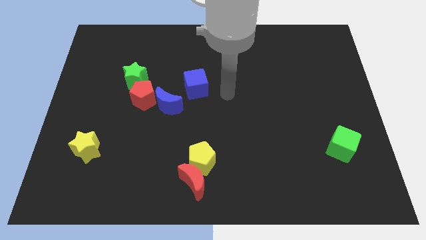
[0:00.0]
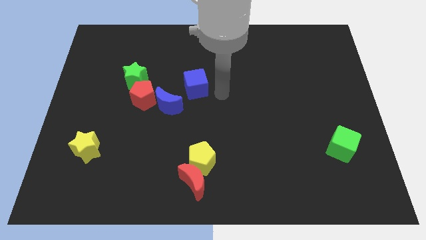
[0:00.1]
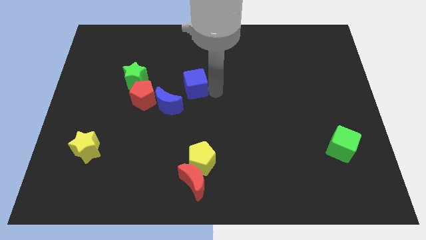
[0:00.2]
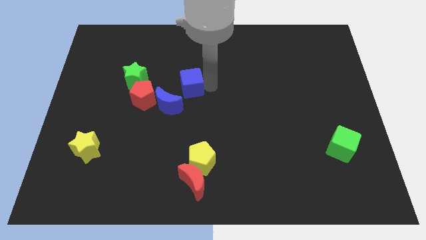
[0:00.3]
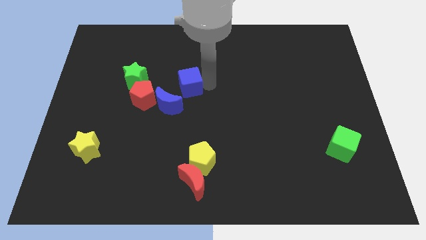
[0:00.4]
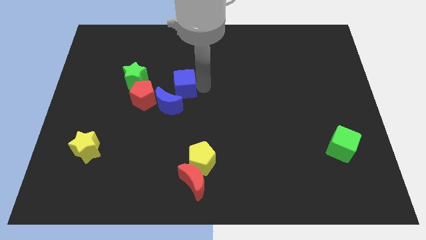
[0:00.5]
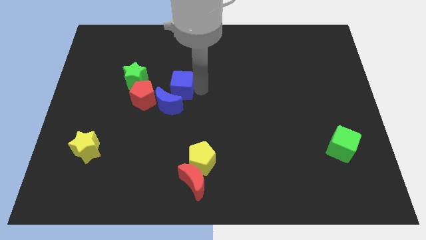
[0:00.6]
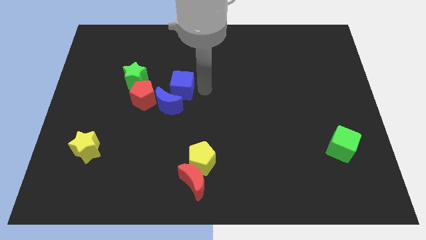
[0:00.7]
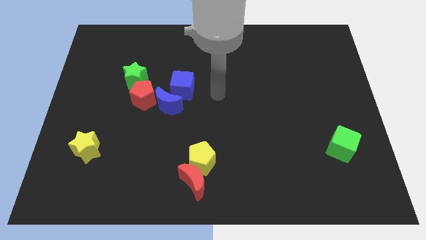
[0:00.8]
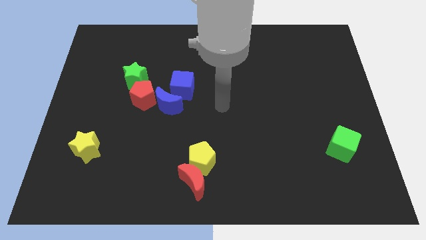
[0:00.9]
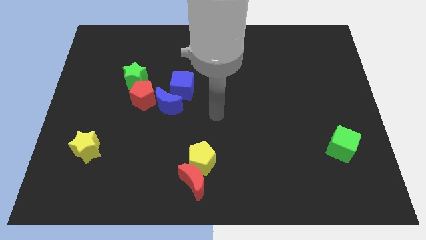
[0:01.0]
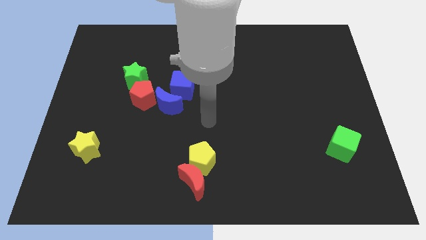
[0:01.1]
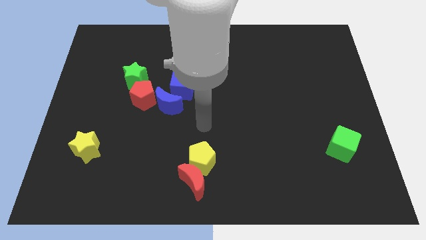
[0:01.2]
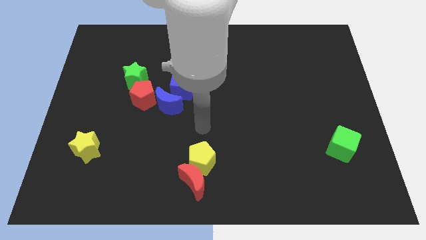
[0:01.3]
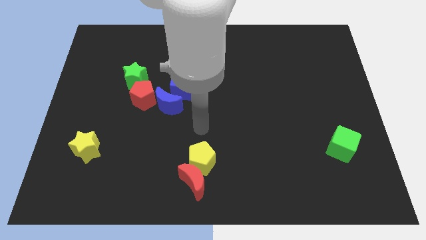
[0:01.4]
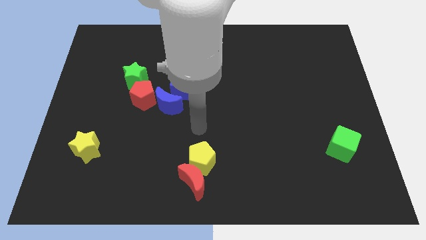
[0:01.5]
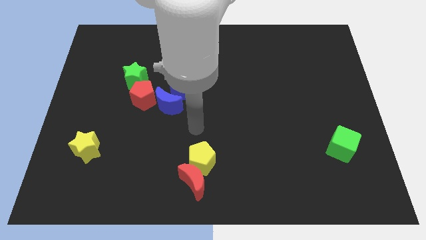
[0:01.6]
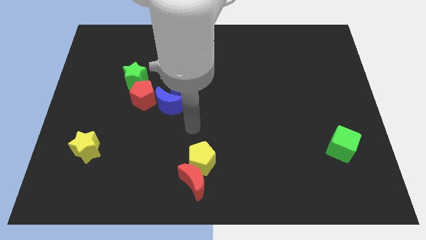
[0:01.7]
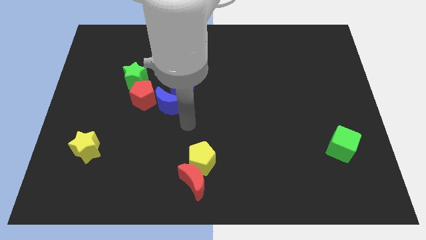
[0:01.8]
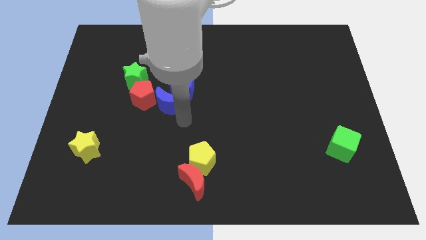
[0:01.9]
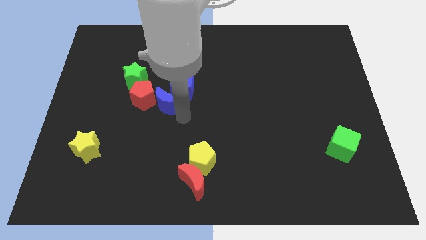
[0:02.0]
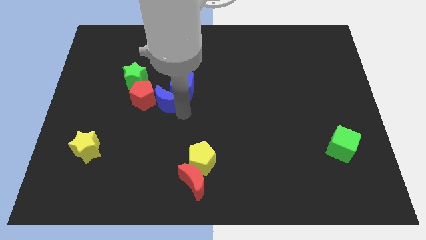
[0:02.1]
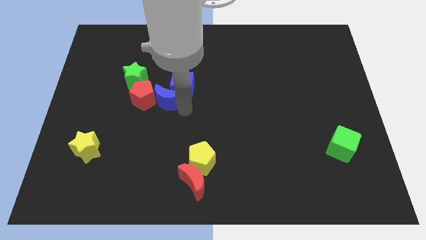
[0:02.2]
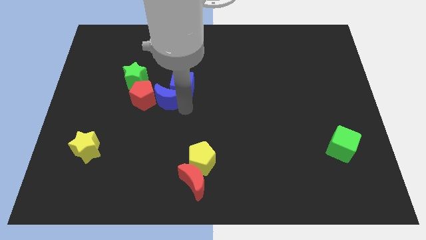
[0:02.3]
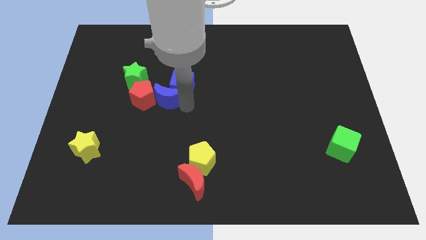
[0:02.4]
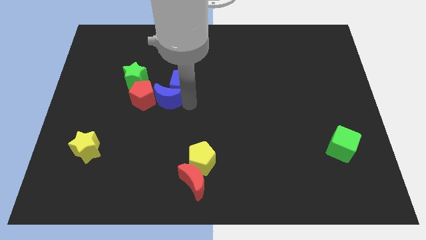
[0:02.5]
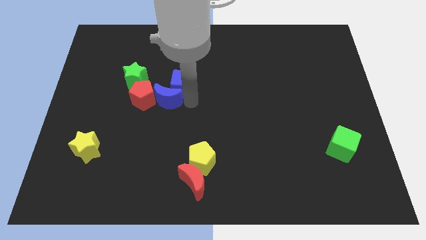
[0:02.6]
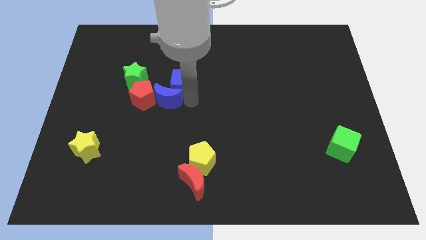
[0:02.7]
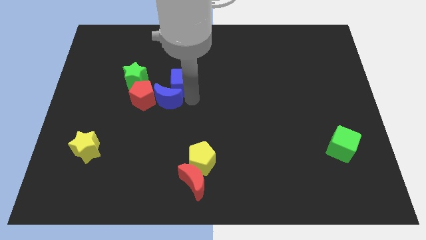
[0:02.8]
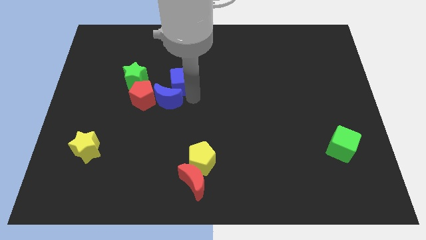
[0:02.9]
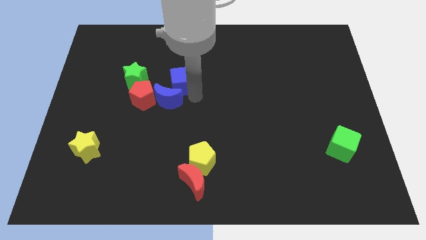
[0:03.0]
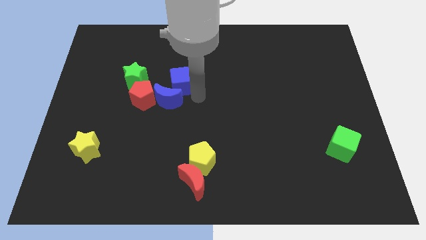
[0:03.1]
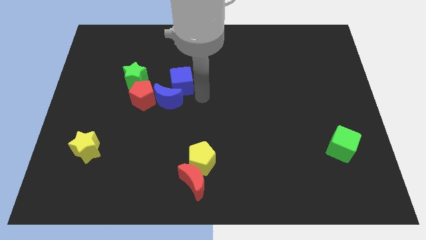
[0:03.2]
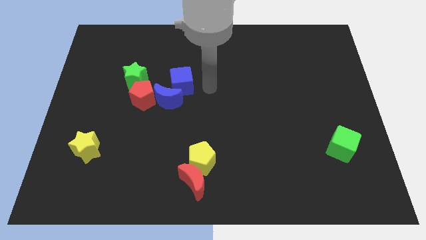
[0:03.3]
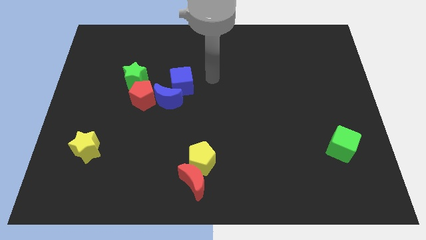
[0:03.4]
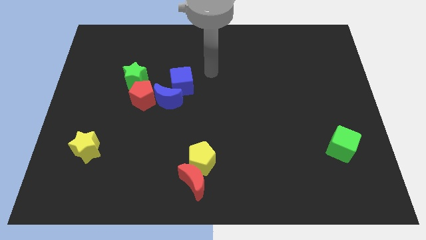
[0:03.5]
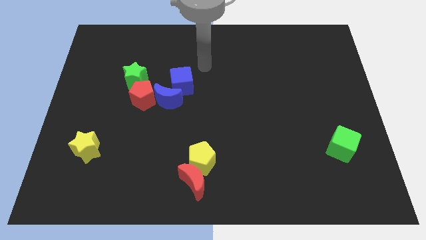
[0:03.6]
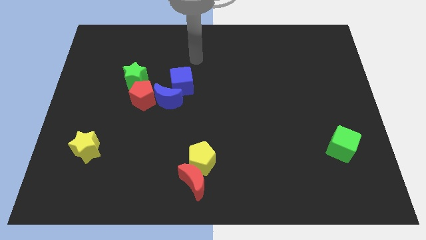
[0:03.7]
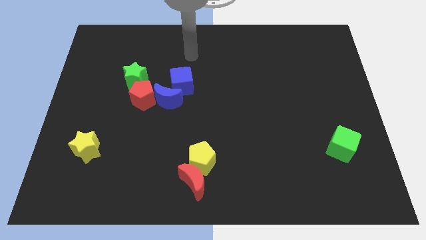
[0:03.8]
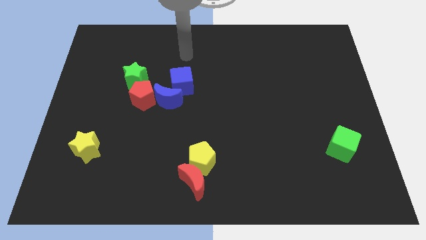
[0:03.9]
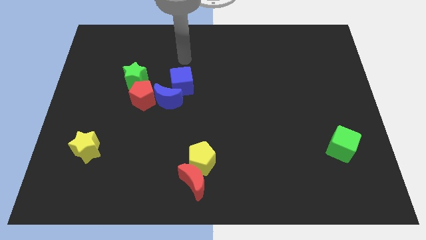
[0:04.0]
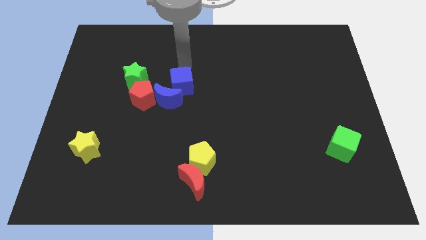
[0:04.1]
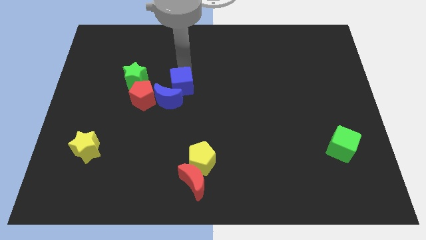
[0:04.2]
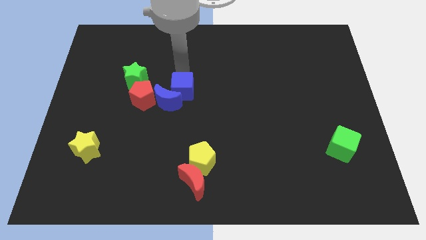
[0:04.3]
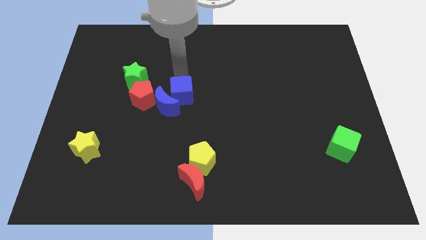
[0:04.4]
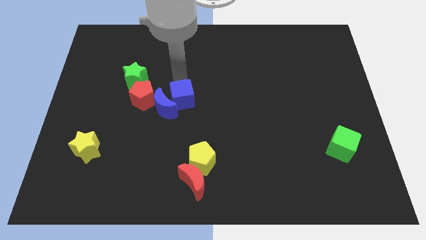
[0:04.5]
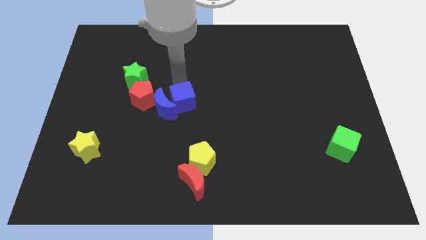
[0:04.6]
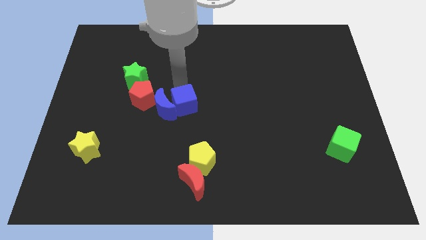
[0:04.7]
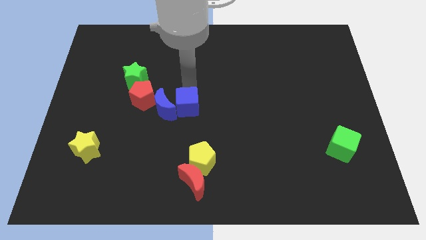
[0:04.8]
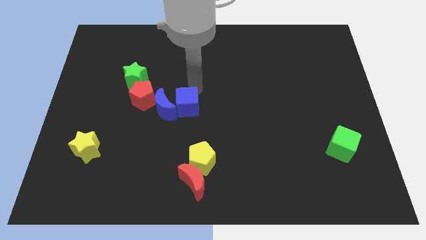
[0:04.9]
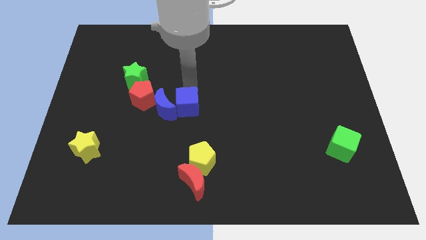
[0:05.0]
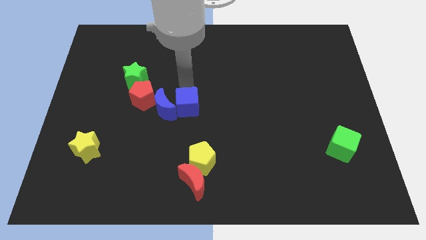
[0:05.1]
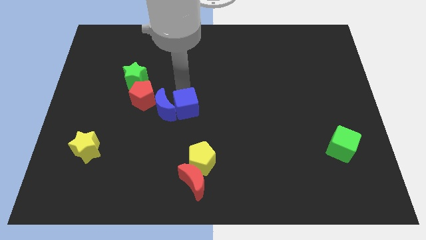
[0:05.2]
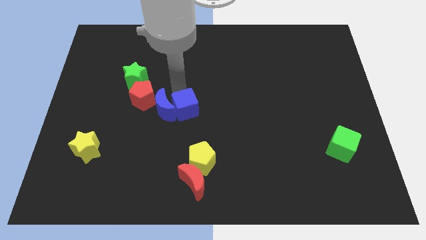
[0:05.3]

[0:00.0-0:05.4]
move the blue blocks to the right of the red pentagon

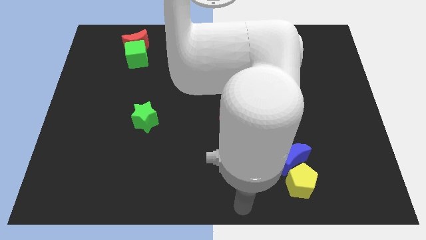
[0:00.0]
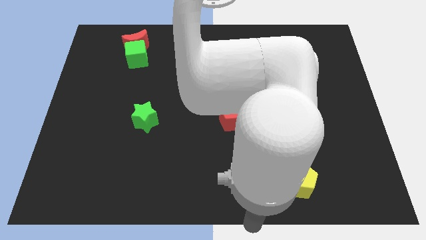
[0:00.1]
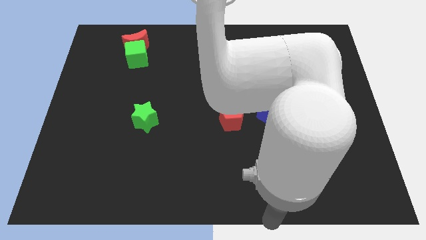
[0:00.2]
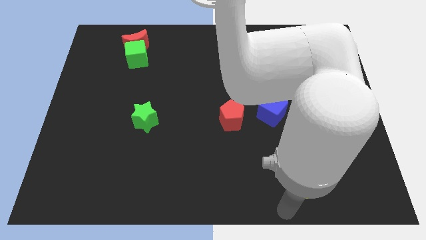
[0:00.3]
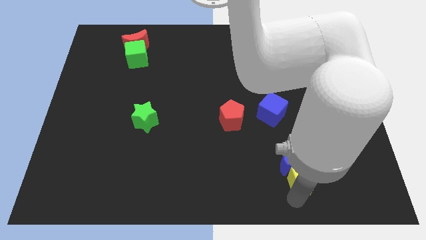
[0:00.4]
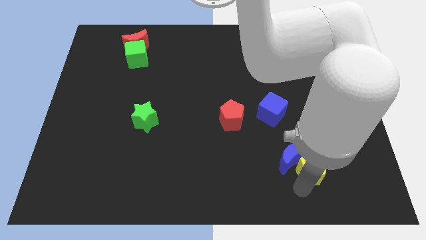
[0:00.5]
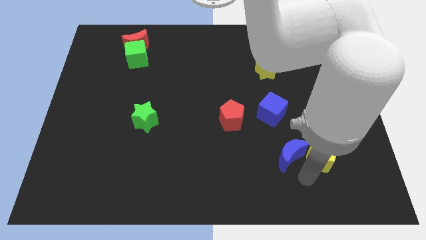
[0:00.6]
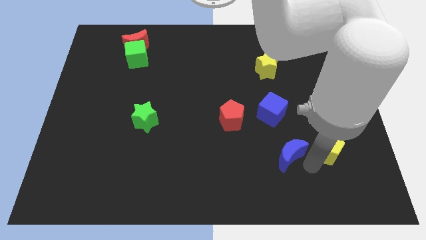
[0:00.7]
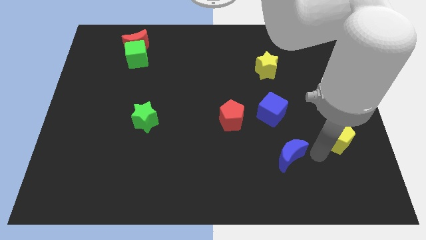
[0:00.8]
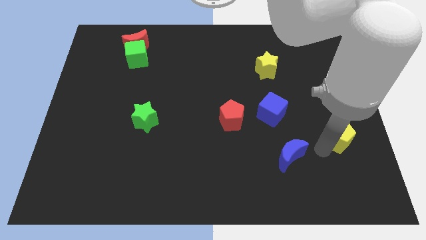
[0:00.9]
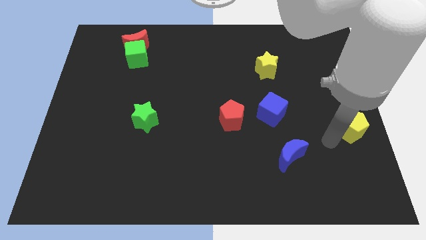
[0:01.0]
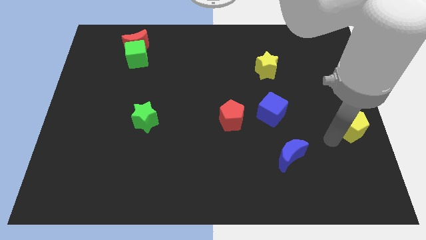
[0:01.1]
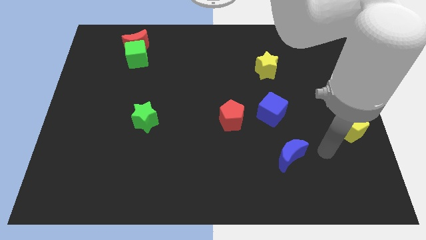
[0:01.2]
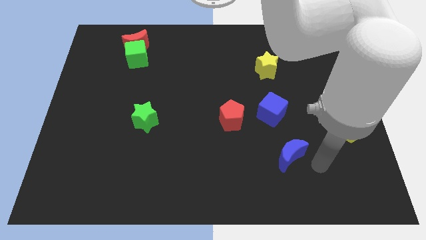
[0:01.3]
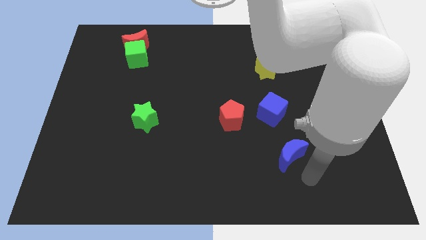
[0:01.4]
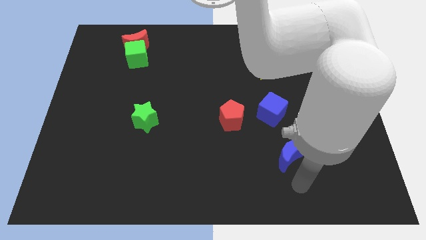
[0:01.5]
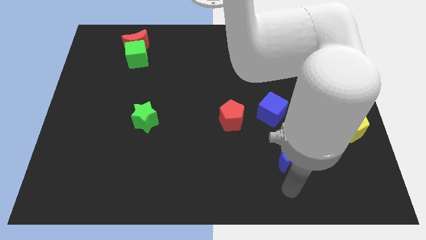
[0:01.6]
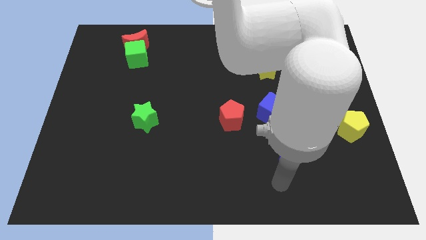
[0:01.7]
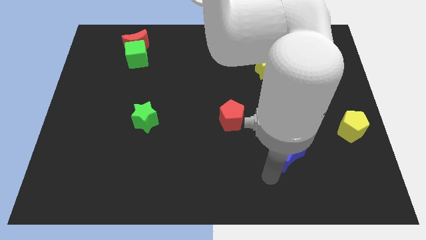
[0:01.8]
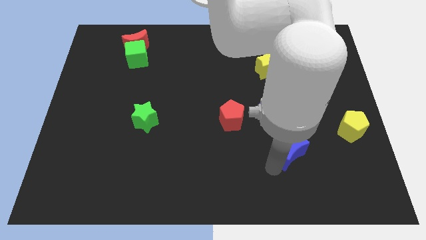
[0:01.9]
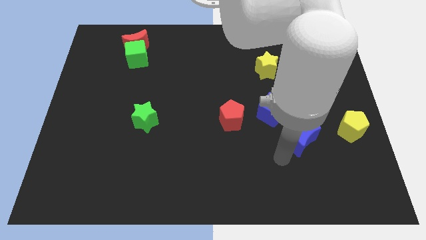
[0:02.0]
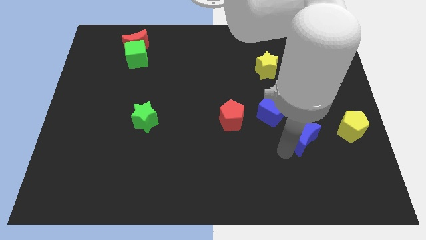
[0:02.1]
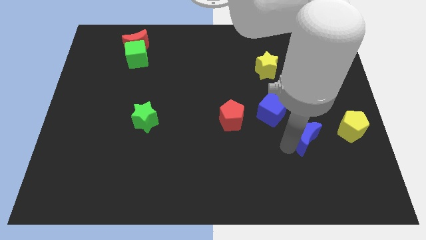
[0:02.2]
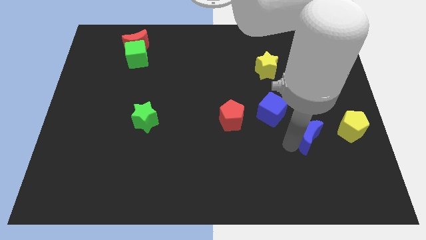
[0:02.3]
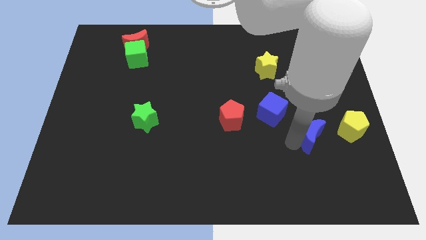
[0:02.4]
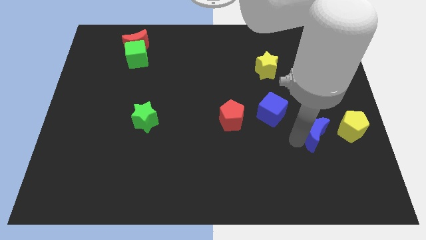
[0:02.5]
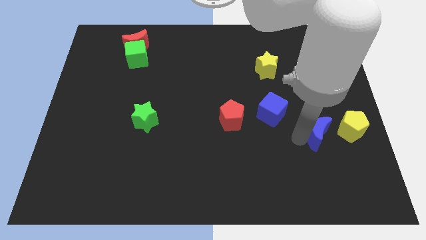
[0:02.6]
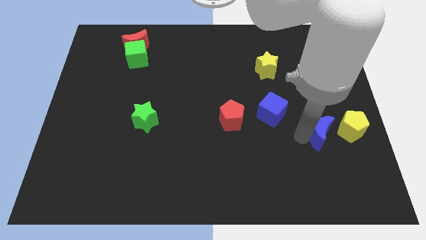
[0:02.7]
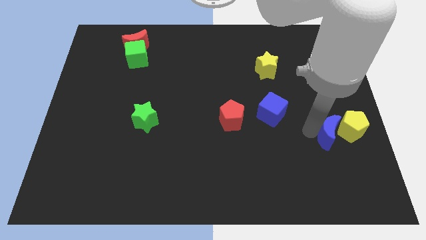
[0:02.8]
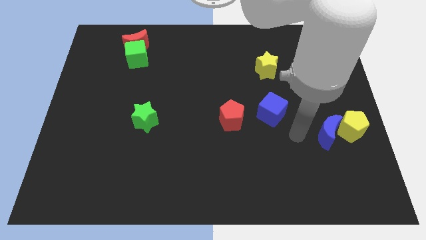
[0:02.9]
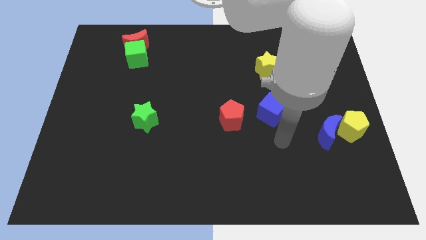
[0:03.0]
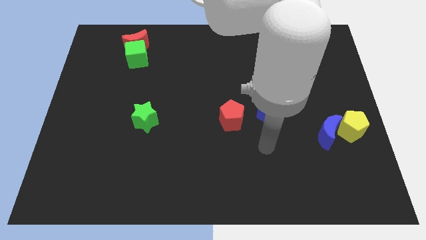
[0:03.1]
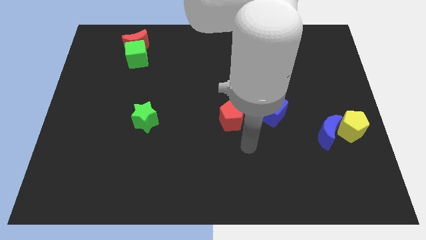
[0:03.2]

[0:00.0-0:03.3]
push the yellow pentagon and blue crescent to the center right of the board

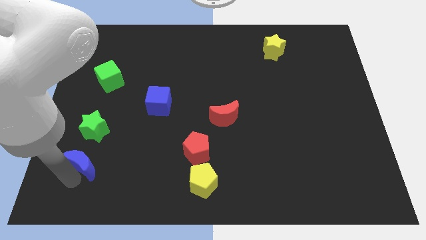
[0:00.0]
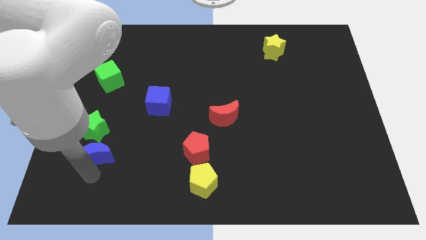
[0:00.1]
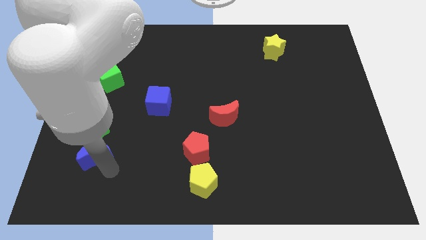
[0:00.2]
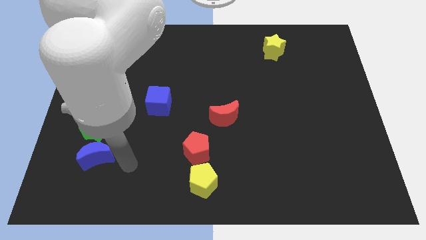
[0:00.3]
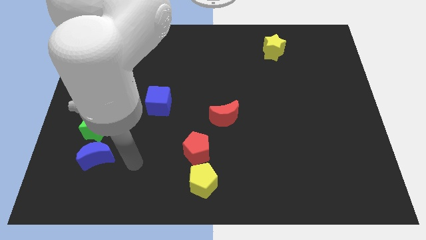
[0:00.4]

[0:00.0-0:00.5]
move the blue crescent below the green star
